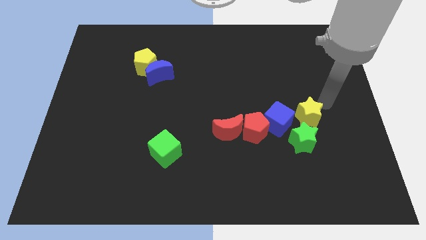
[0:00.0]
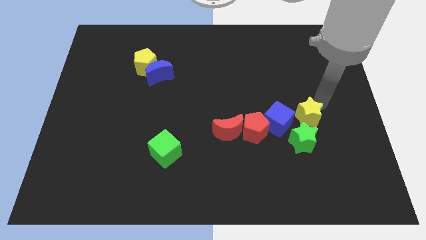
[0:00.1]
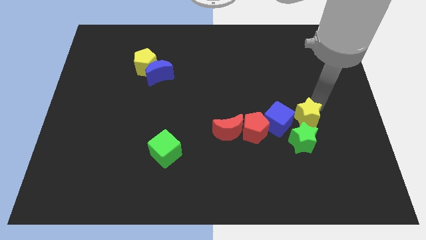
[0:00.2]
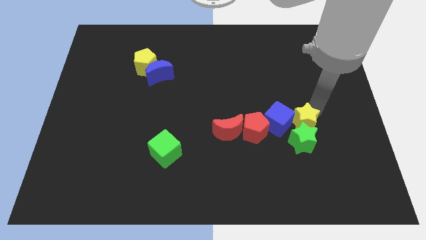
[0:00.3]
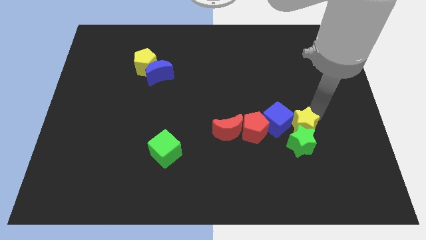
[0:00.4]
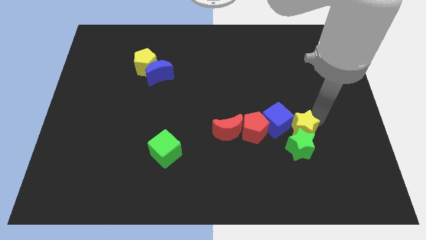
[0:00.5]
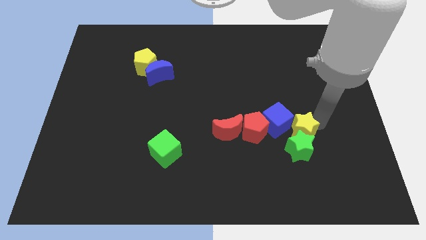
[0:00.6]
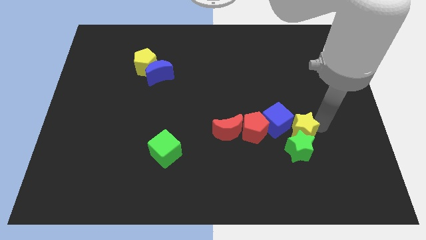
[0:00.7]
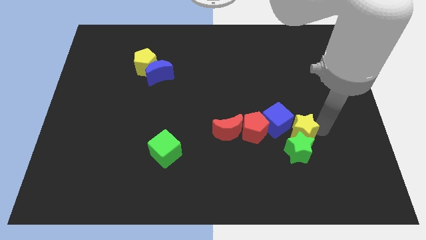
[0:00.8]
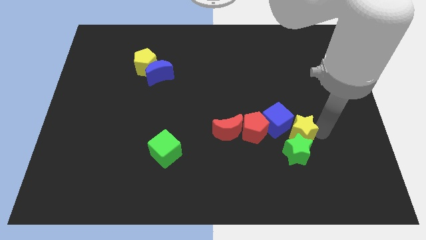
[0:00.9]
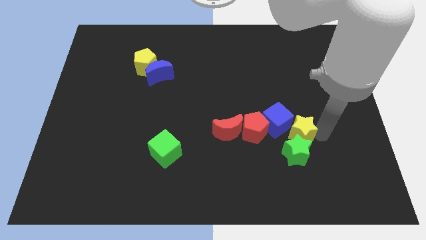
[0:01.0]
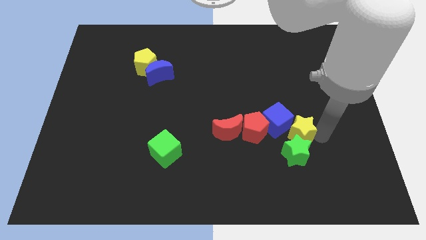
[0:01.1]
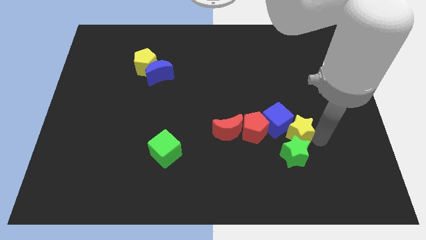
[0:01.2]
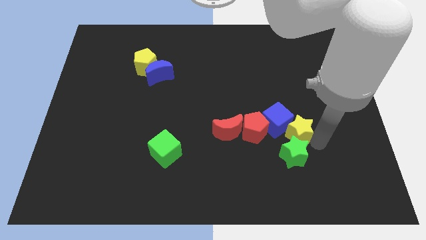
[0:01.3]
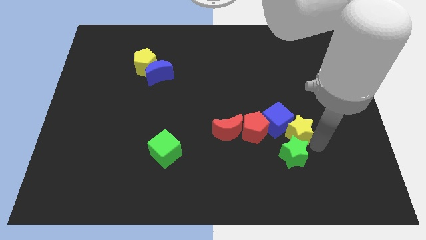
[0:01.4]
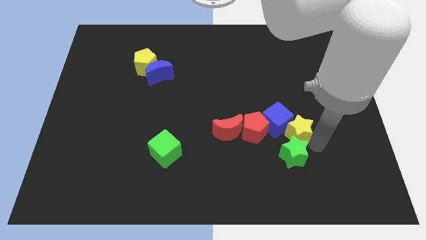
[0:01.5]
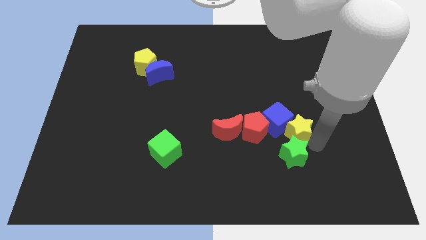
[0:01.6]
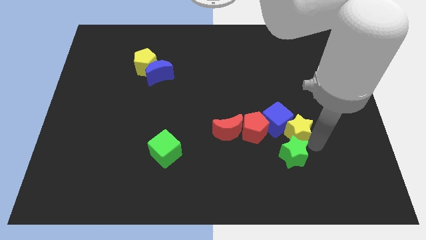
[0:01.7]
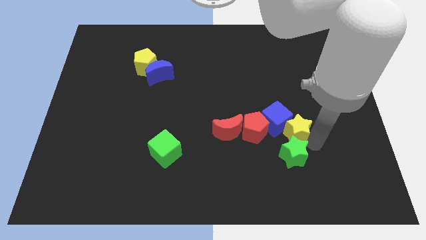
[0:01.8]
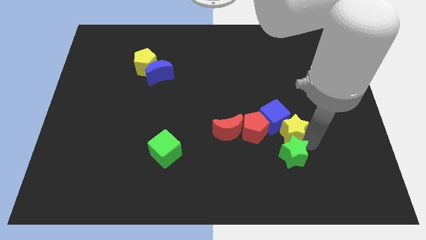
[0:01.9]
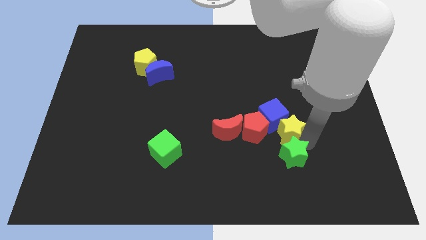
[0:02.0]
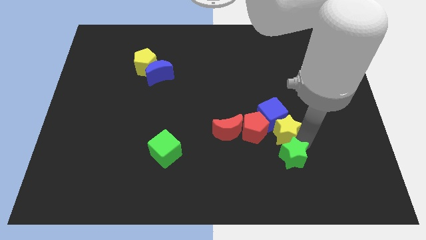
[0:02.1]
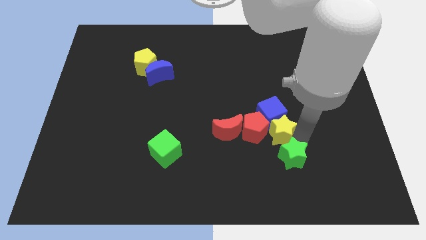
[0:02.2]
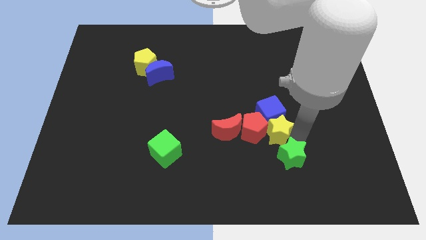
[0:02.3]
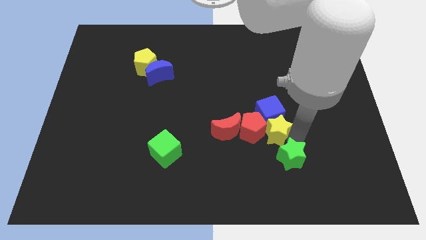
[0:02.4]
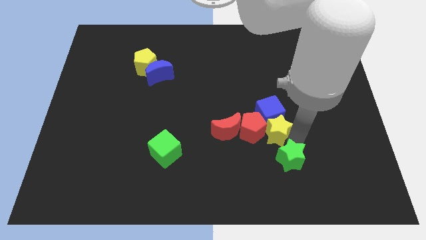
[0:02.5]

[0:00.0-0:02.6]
push the yellow star into the red pentagon

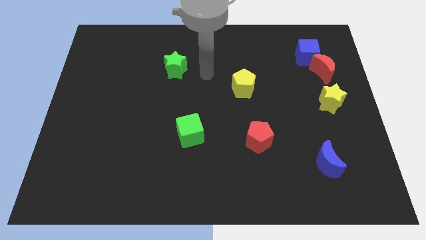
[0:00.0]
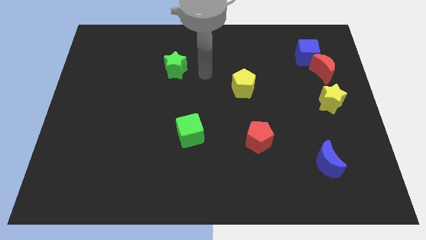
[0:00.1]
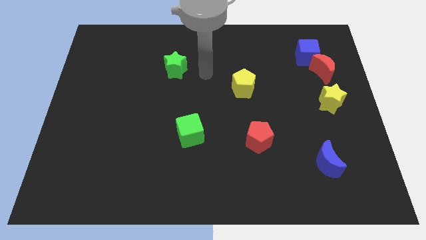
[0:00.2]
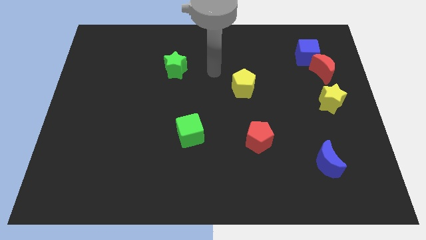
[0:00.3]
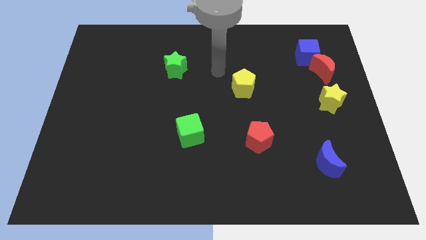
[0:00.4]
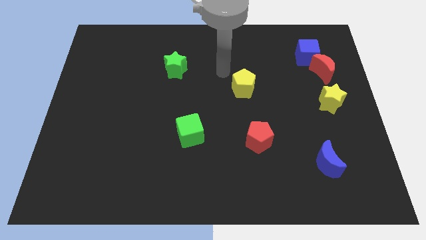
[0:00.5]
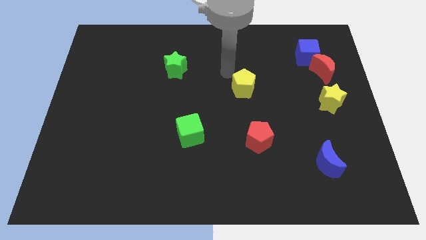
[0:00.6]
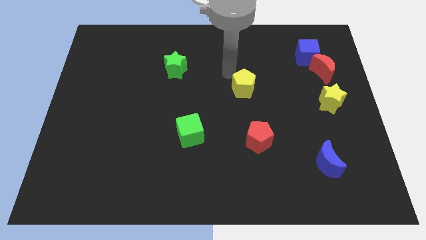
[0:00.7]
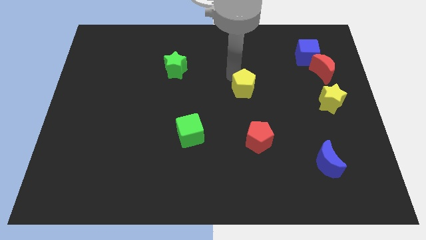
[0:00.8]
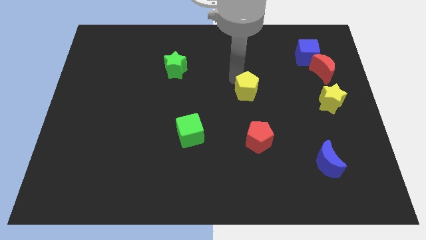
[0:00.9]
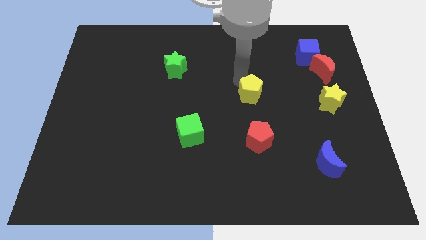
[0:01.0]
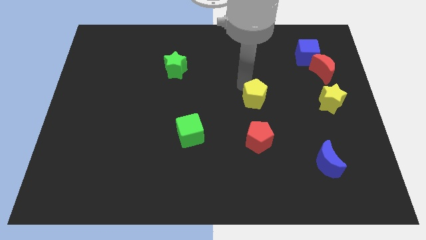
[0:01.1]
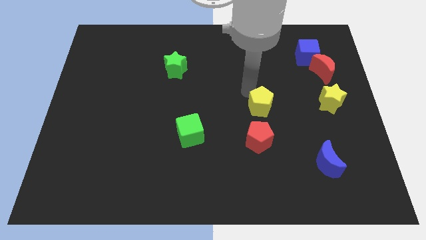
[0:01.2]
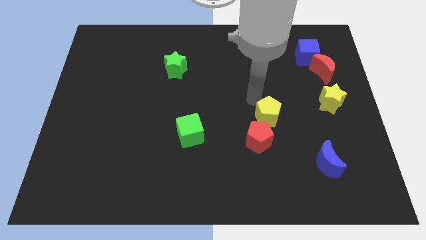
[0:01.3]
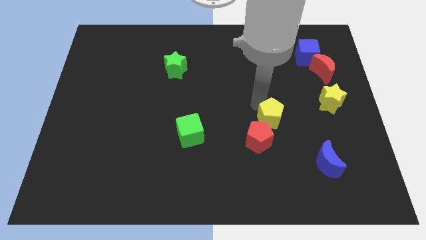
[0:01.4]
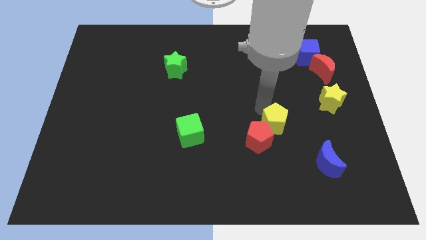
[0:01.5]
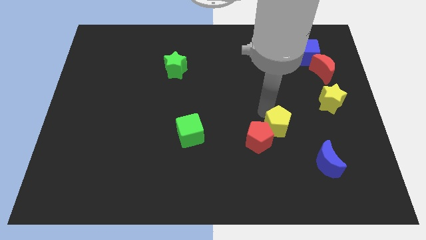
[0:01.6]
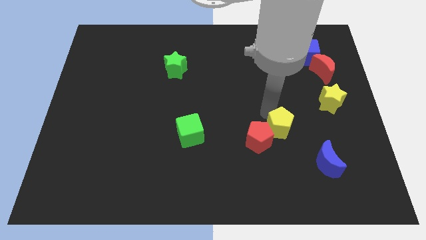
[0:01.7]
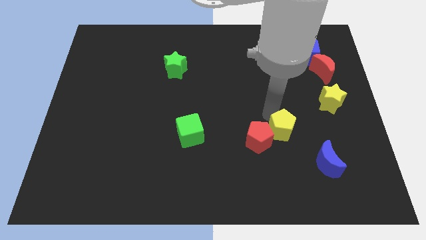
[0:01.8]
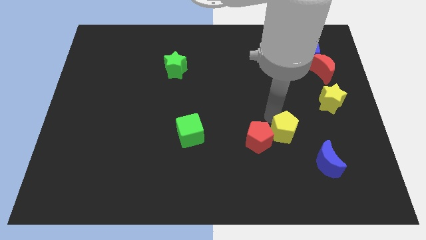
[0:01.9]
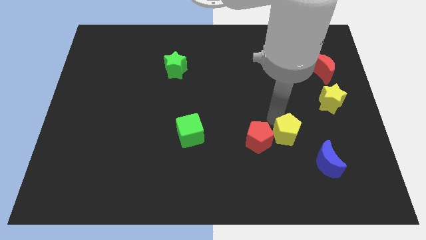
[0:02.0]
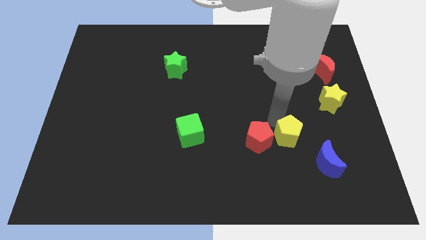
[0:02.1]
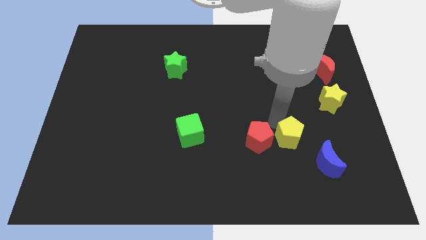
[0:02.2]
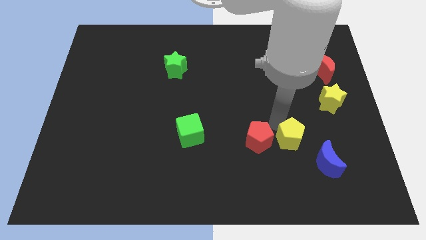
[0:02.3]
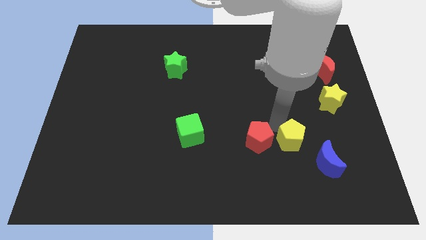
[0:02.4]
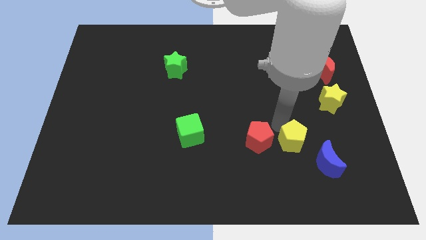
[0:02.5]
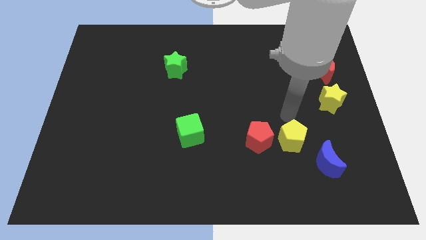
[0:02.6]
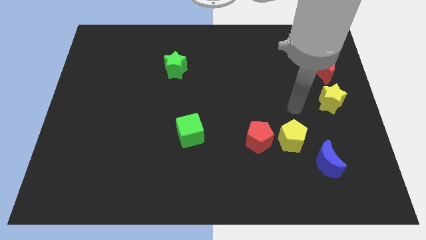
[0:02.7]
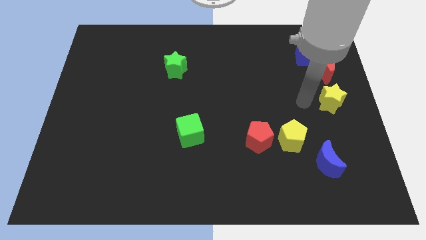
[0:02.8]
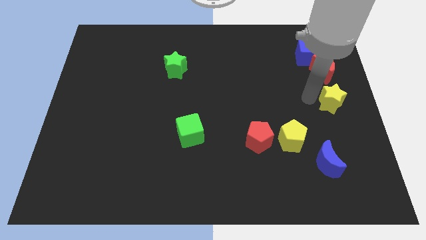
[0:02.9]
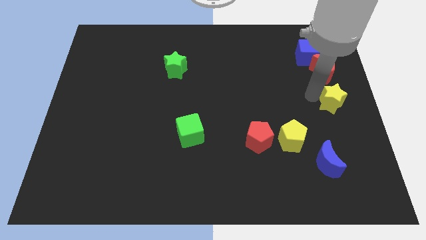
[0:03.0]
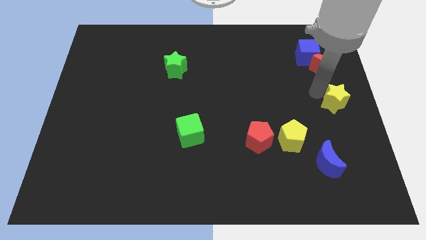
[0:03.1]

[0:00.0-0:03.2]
place the yellow pentagon right to the red pentagon

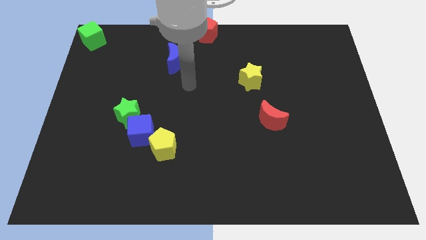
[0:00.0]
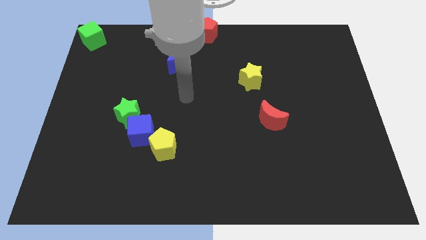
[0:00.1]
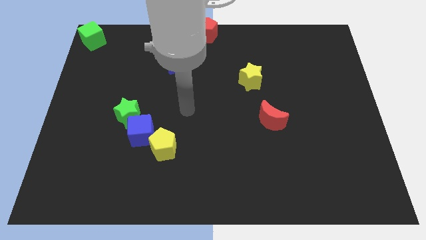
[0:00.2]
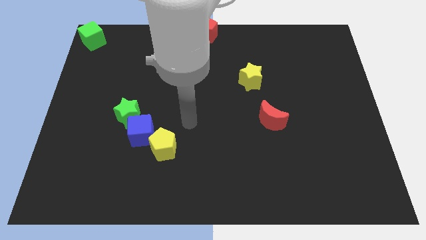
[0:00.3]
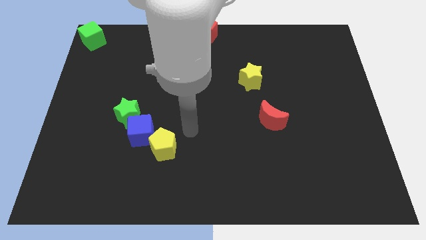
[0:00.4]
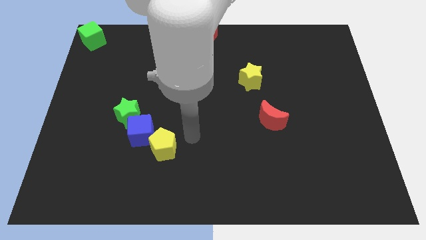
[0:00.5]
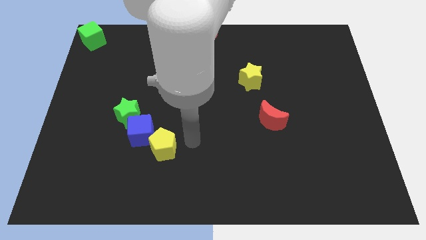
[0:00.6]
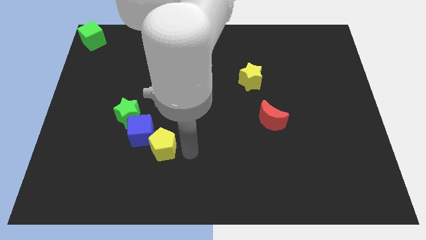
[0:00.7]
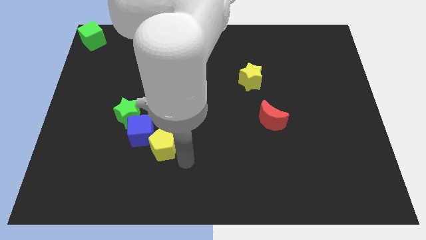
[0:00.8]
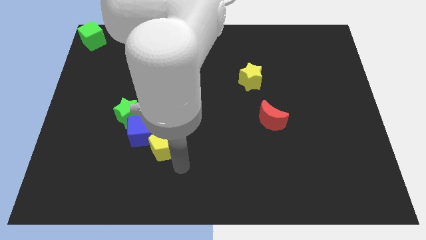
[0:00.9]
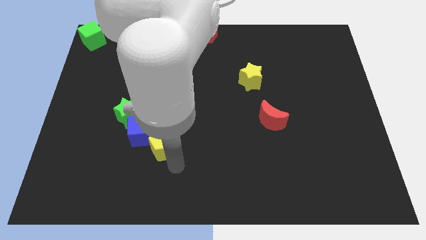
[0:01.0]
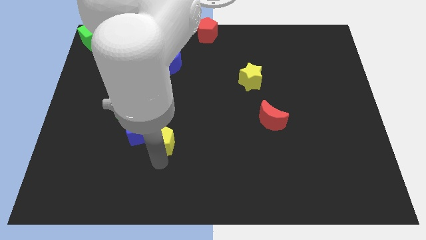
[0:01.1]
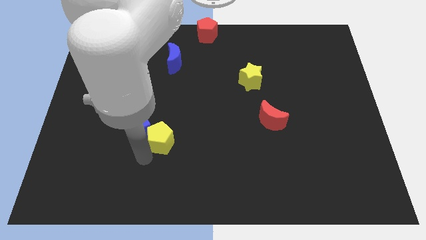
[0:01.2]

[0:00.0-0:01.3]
touch the bottom of yellow pentagon

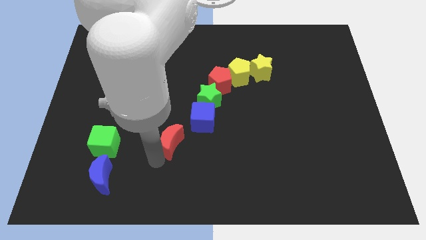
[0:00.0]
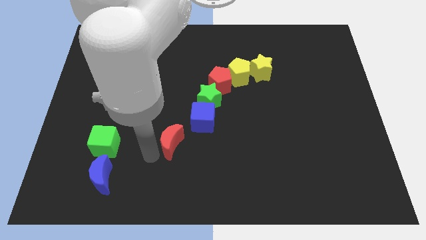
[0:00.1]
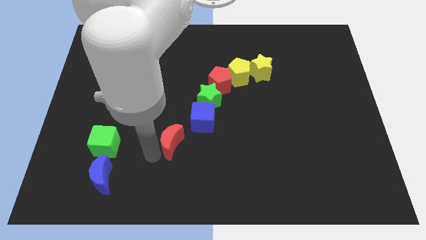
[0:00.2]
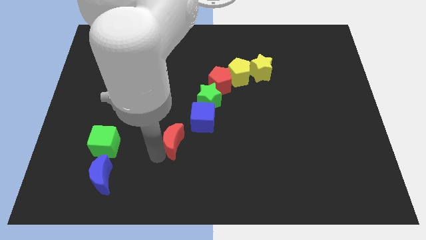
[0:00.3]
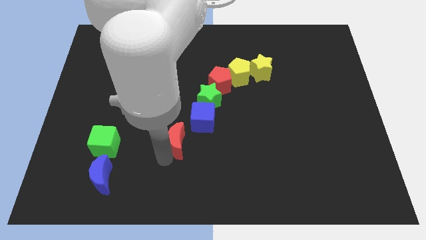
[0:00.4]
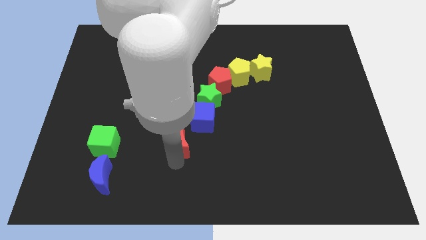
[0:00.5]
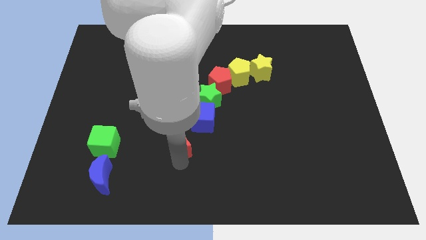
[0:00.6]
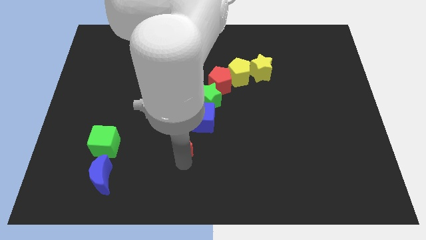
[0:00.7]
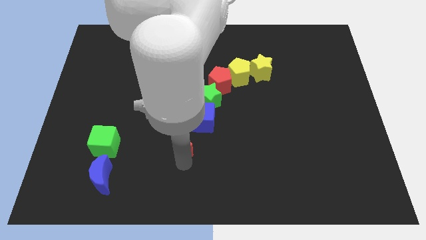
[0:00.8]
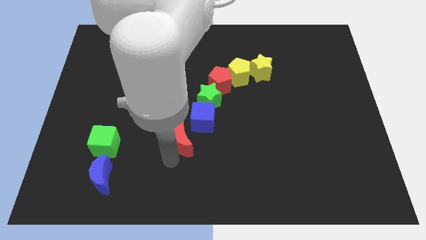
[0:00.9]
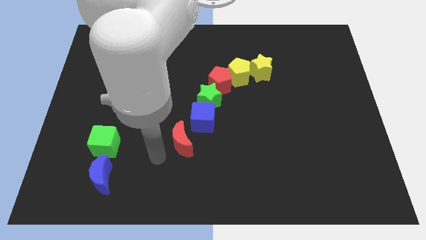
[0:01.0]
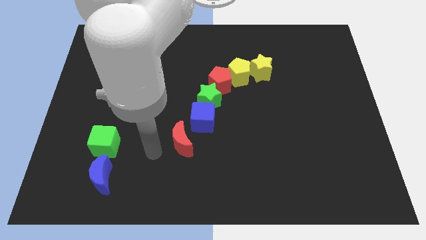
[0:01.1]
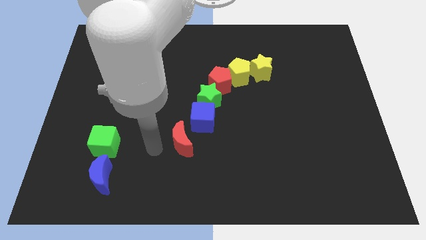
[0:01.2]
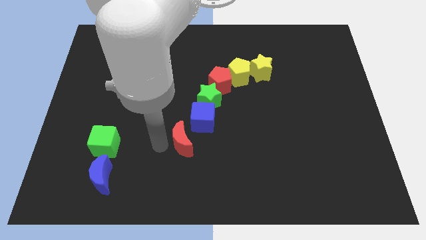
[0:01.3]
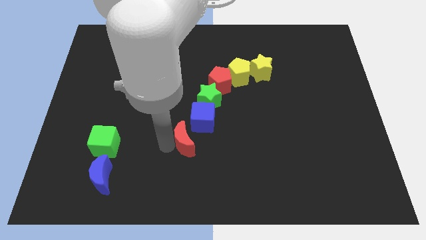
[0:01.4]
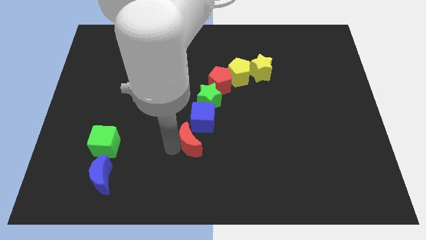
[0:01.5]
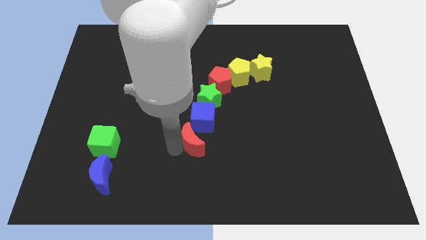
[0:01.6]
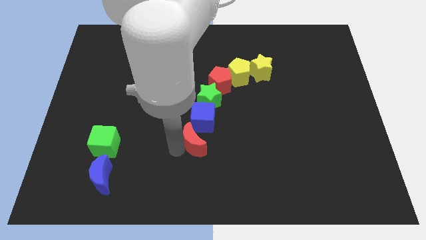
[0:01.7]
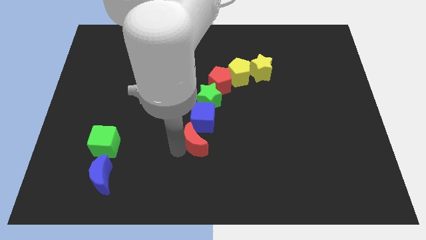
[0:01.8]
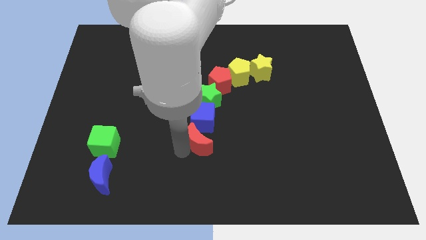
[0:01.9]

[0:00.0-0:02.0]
place the red crescent below the blue cube
